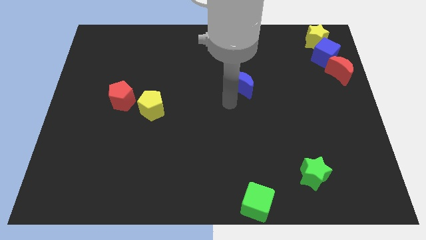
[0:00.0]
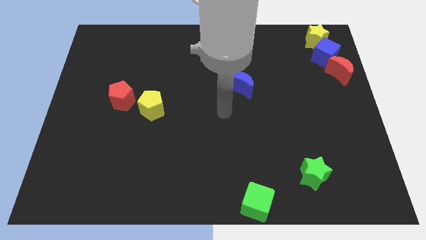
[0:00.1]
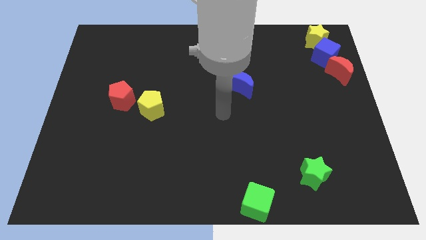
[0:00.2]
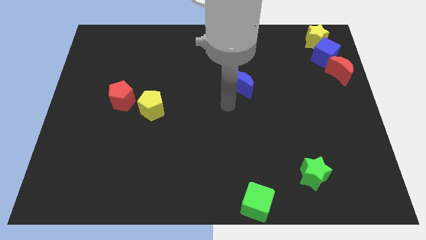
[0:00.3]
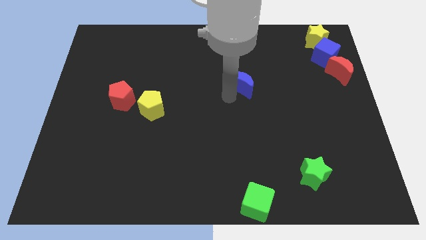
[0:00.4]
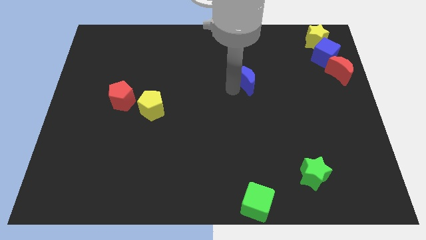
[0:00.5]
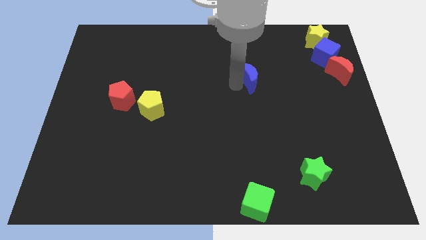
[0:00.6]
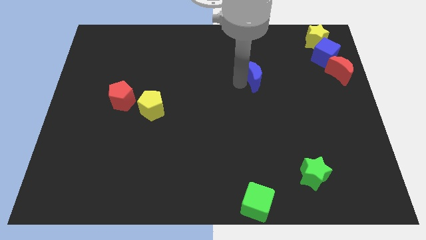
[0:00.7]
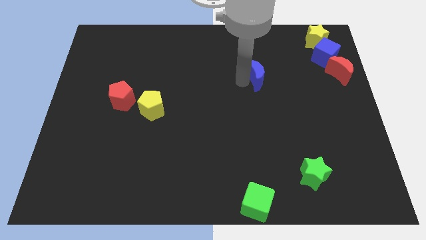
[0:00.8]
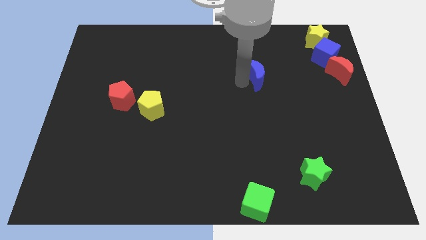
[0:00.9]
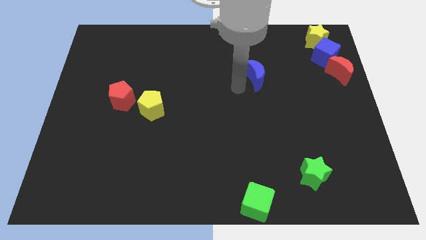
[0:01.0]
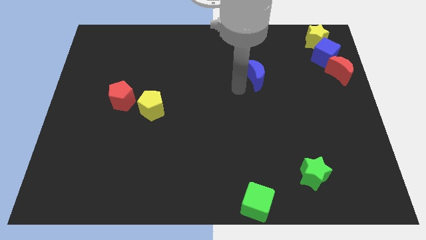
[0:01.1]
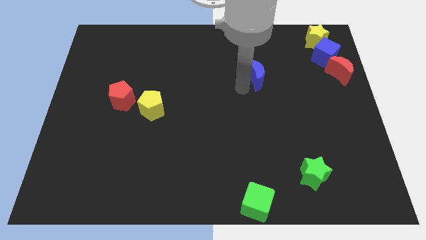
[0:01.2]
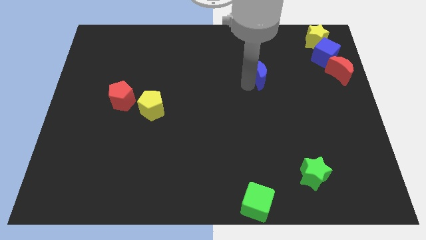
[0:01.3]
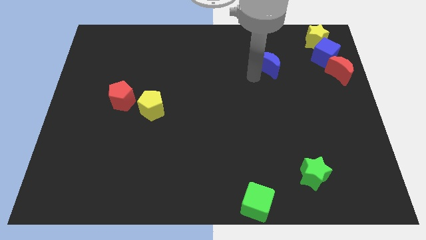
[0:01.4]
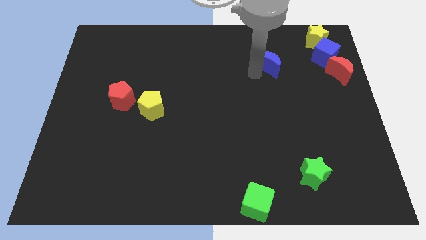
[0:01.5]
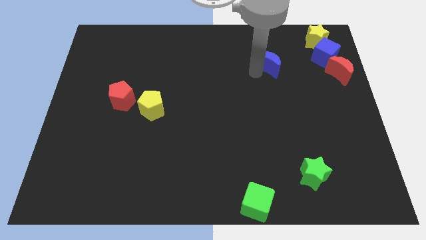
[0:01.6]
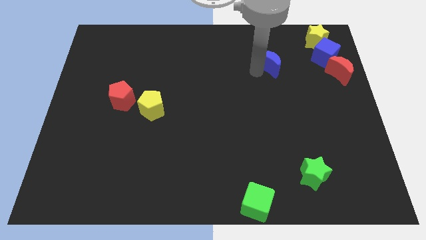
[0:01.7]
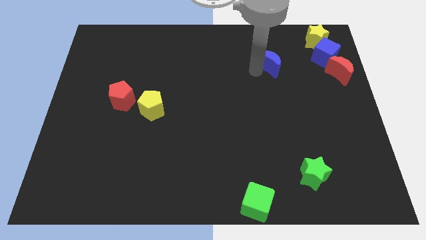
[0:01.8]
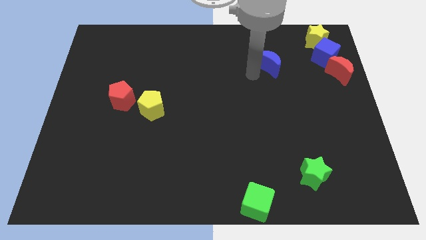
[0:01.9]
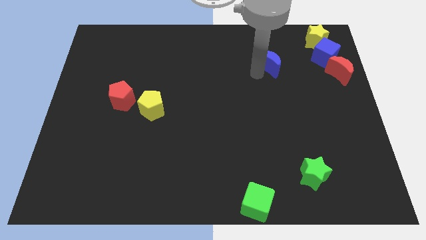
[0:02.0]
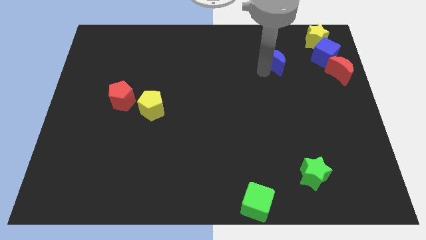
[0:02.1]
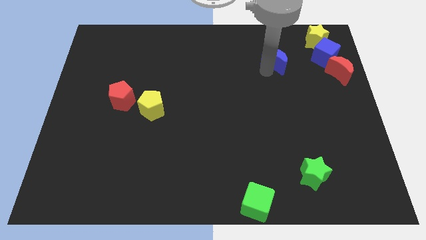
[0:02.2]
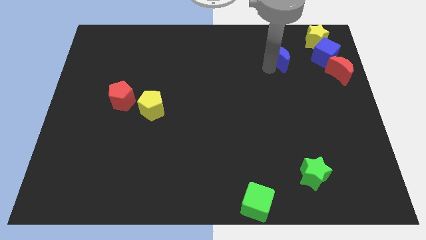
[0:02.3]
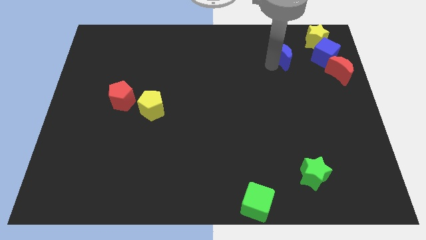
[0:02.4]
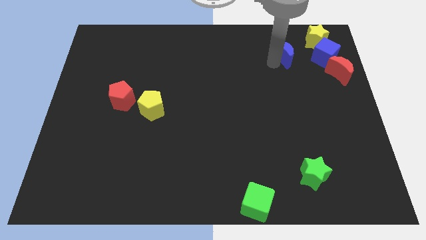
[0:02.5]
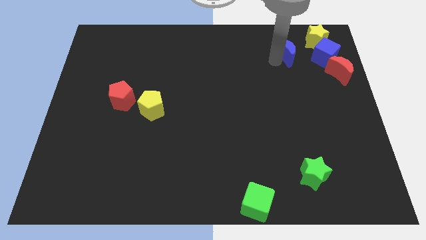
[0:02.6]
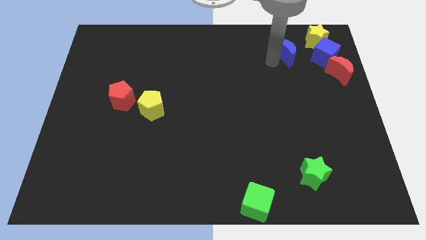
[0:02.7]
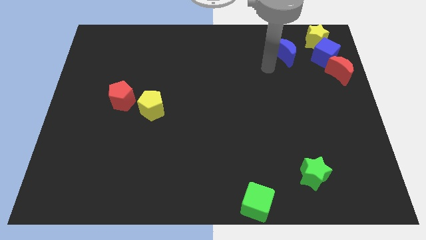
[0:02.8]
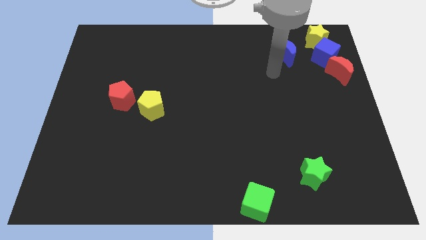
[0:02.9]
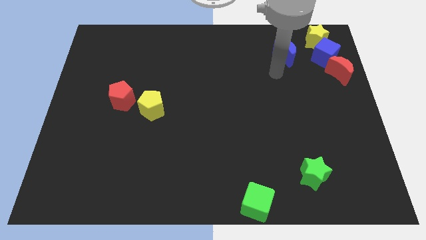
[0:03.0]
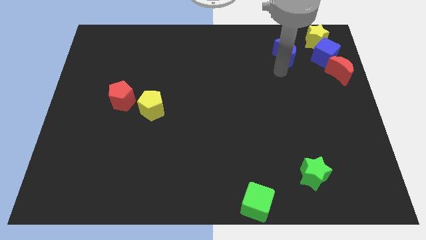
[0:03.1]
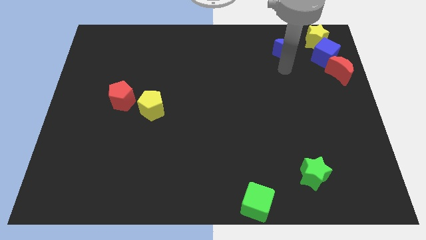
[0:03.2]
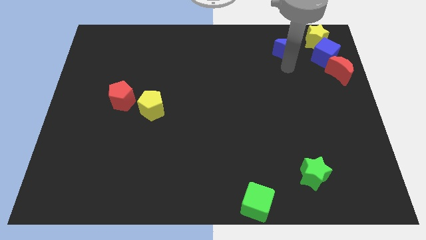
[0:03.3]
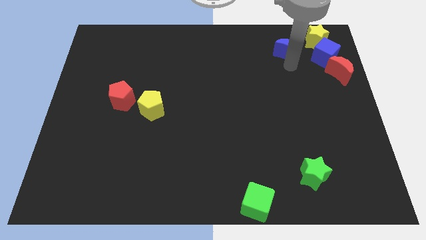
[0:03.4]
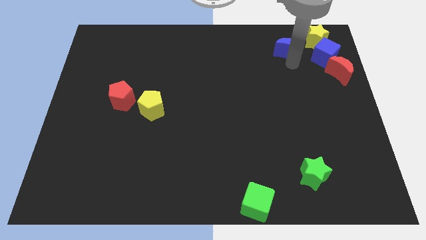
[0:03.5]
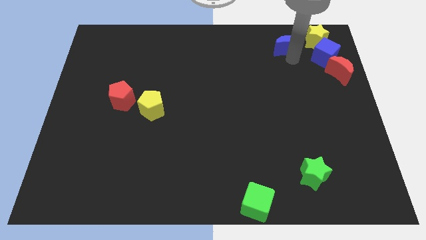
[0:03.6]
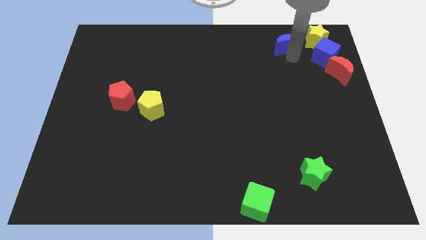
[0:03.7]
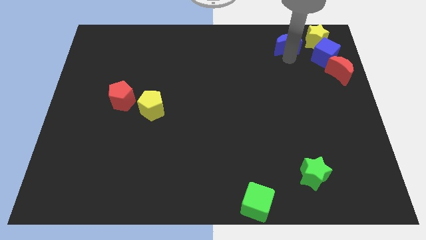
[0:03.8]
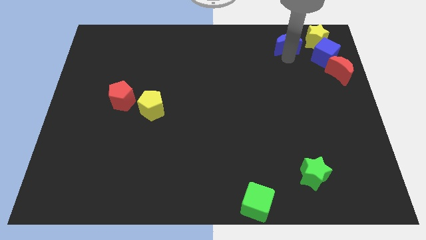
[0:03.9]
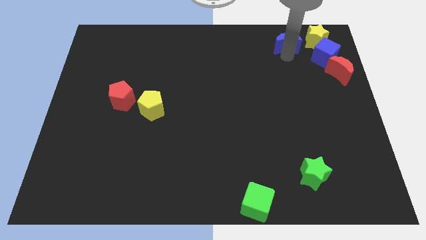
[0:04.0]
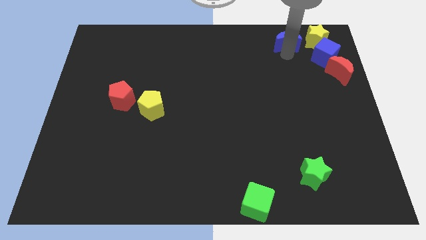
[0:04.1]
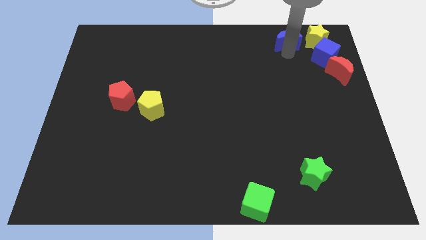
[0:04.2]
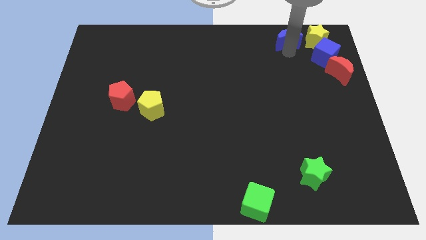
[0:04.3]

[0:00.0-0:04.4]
place the blue moon to the left of the yellow star

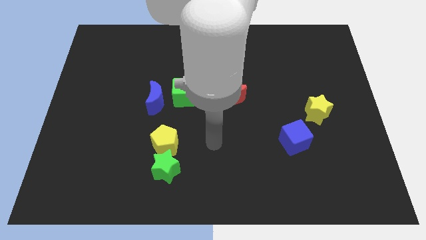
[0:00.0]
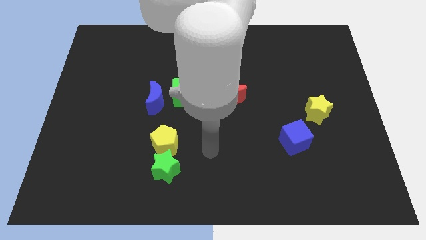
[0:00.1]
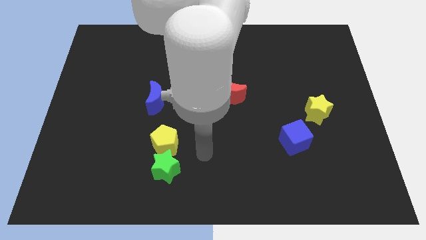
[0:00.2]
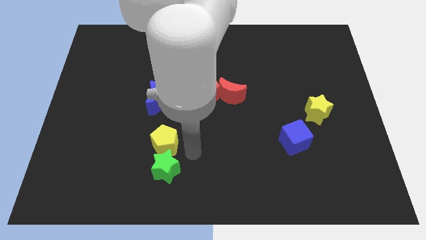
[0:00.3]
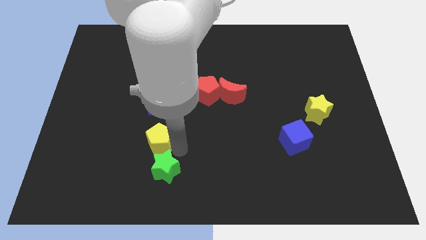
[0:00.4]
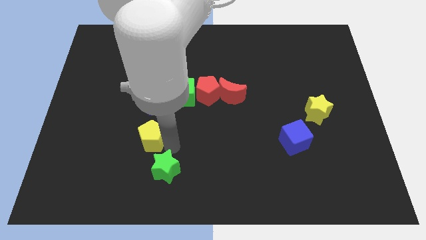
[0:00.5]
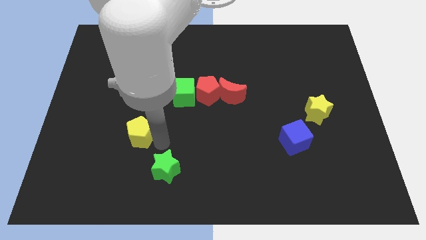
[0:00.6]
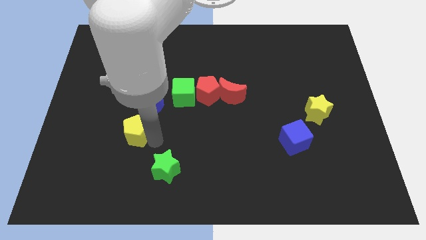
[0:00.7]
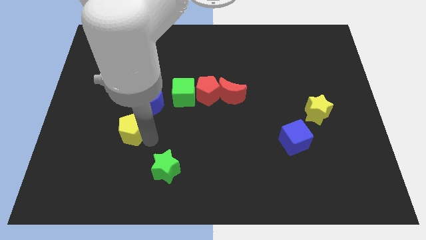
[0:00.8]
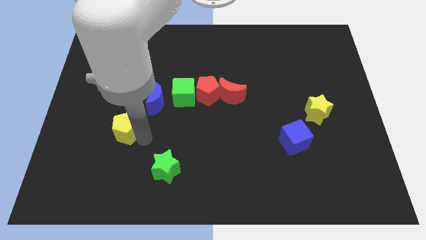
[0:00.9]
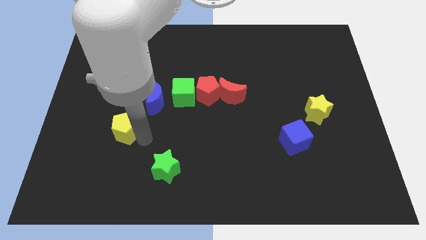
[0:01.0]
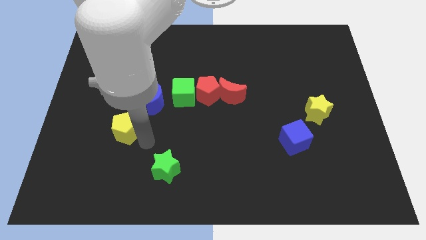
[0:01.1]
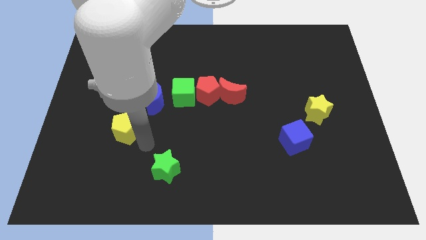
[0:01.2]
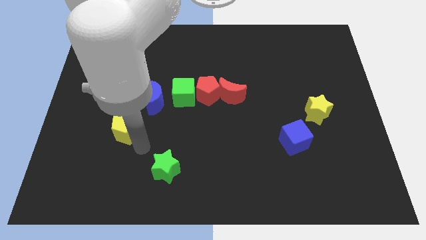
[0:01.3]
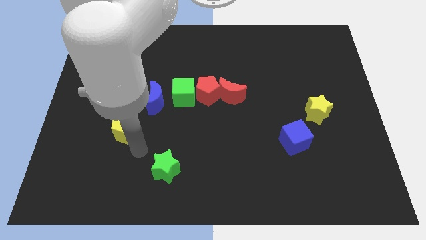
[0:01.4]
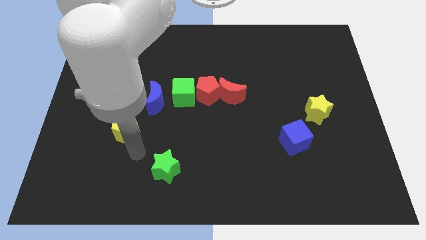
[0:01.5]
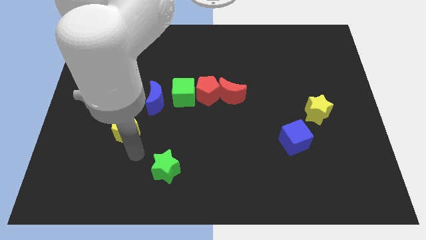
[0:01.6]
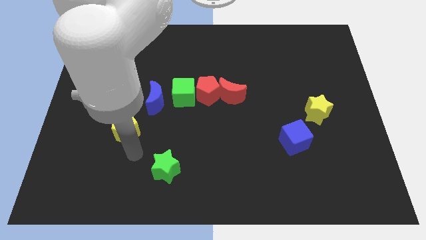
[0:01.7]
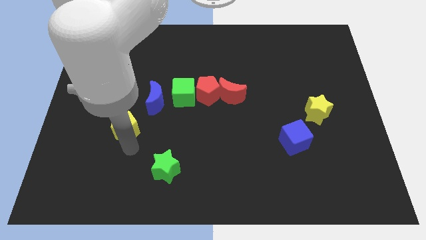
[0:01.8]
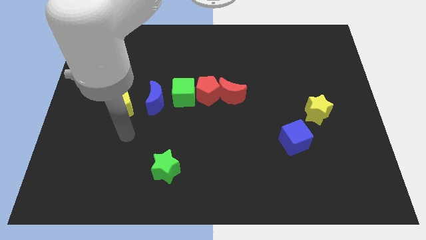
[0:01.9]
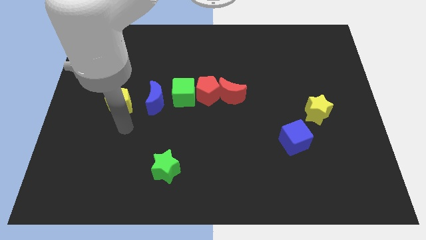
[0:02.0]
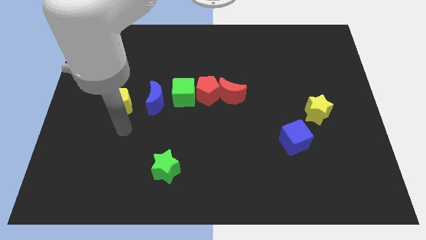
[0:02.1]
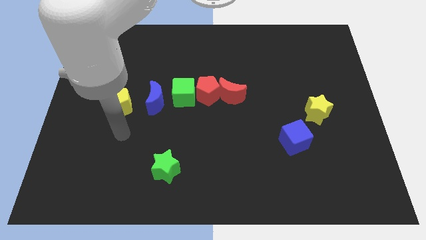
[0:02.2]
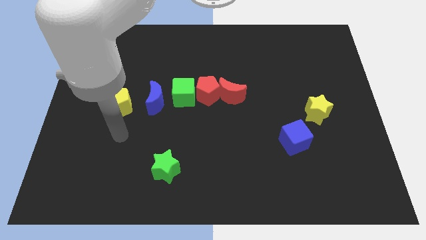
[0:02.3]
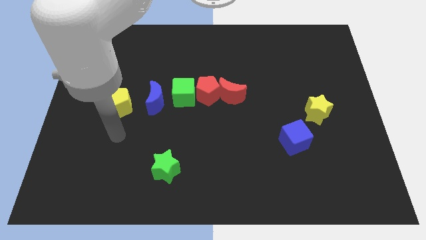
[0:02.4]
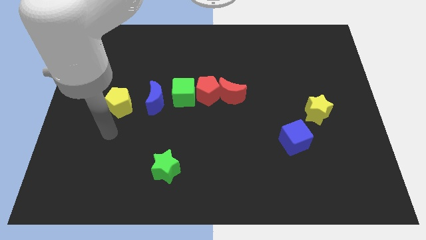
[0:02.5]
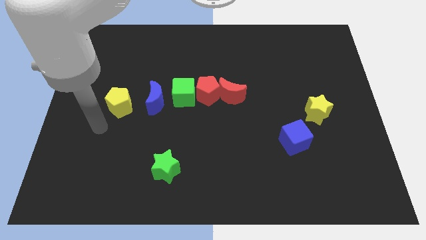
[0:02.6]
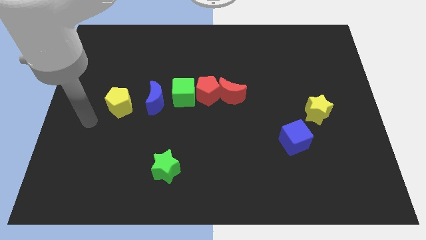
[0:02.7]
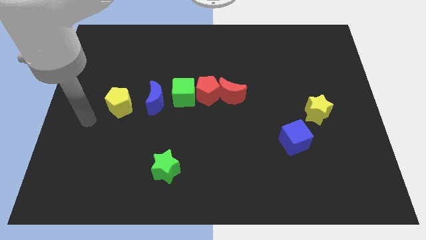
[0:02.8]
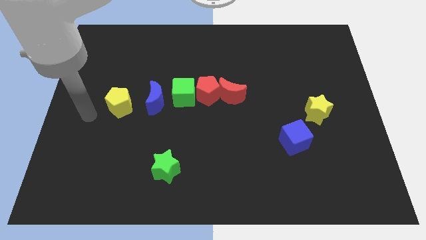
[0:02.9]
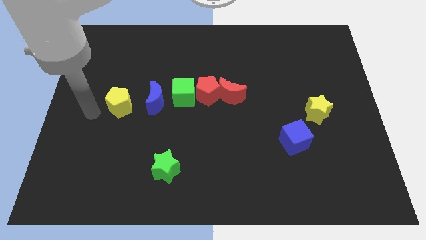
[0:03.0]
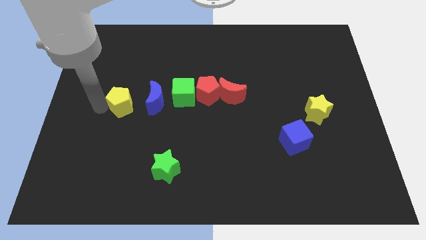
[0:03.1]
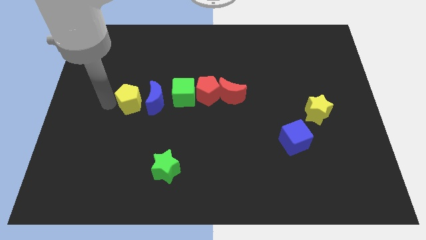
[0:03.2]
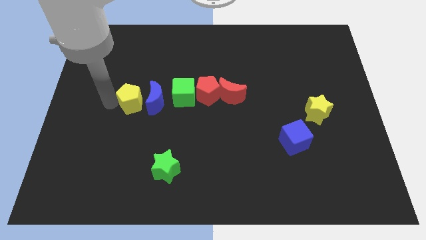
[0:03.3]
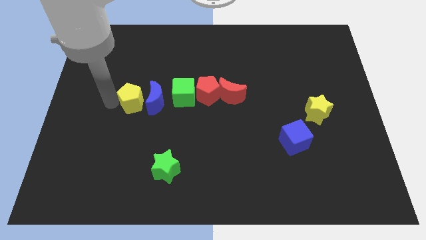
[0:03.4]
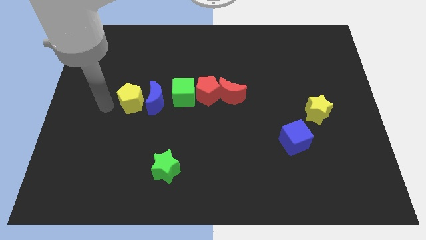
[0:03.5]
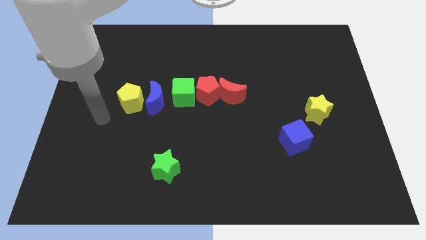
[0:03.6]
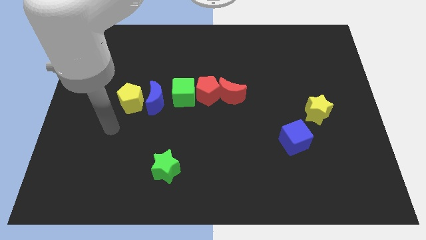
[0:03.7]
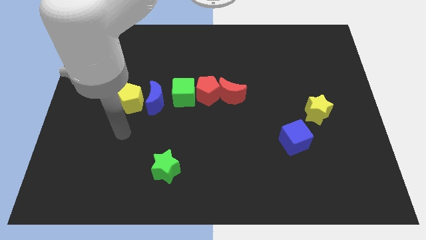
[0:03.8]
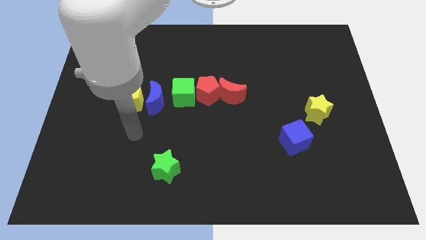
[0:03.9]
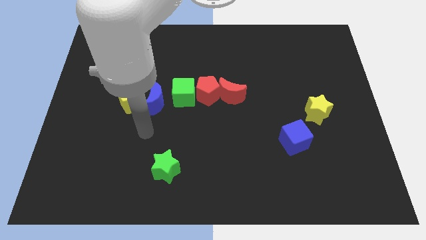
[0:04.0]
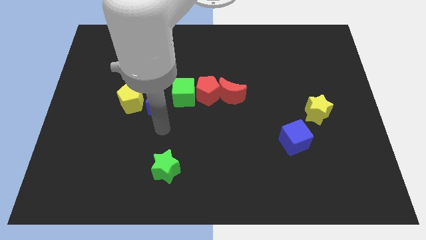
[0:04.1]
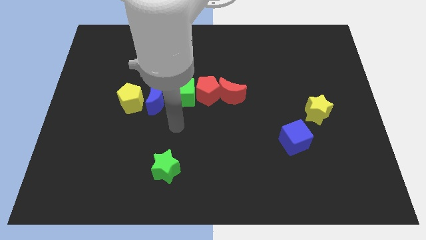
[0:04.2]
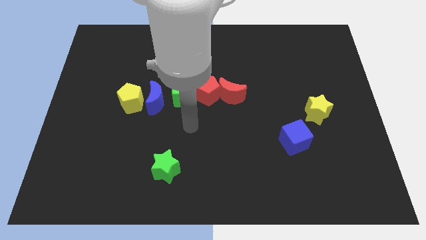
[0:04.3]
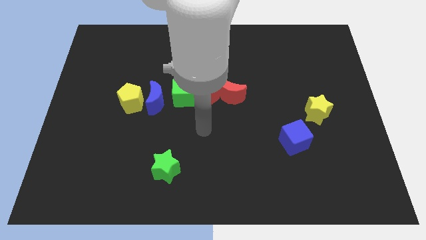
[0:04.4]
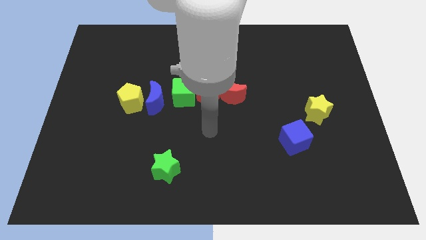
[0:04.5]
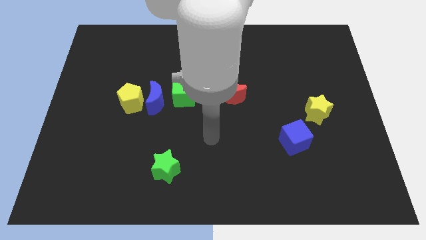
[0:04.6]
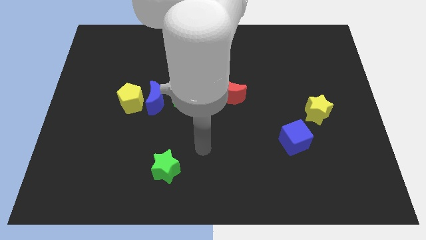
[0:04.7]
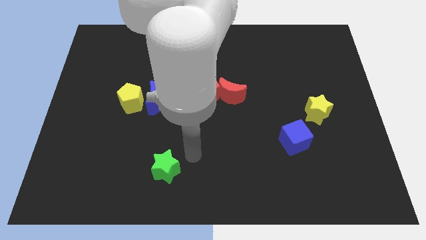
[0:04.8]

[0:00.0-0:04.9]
move your arm to the right of the green star
